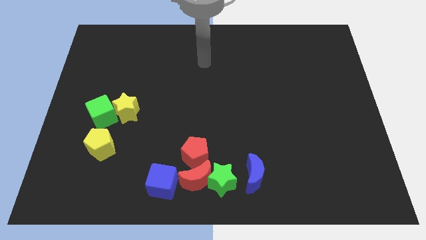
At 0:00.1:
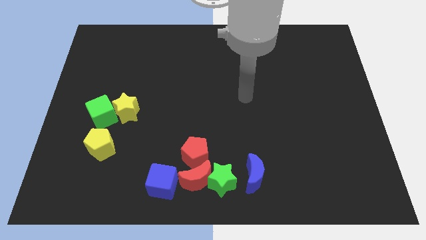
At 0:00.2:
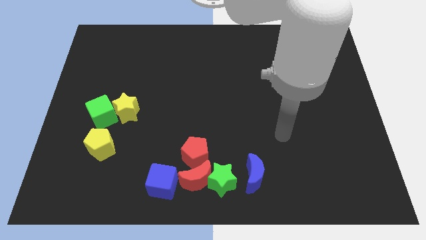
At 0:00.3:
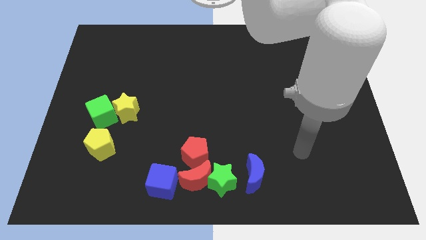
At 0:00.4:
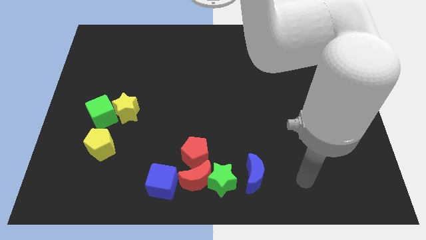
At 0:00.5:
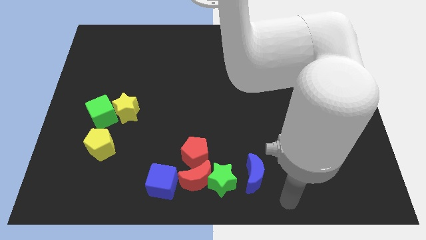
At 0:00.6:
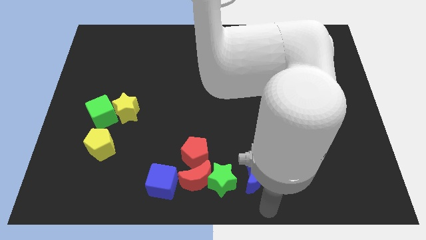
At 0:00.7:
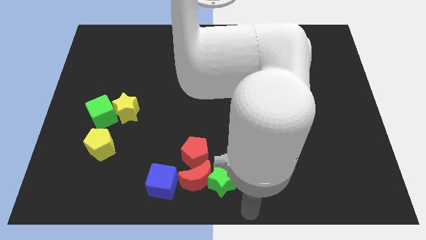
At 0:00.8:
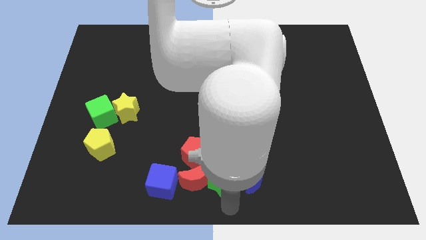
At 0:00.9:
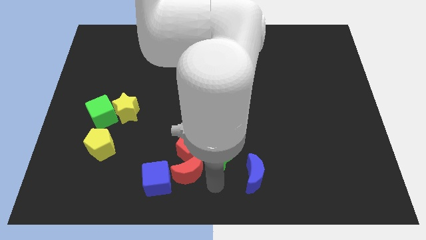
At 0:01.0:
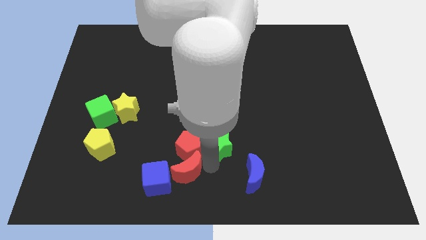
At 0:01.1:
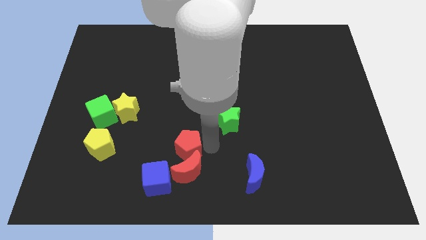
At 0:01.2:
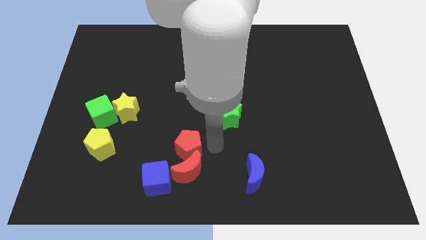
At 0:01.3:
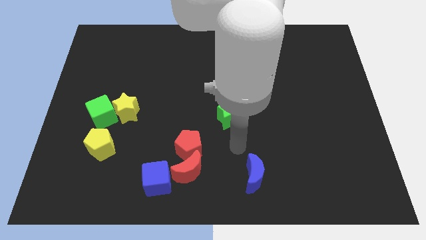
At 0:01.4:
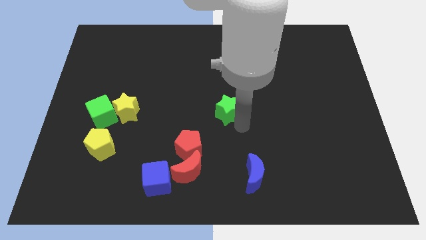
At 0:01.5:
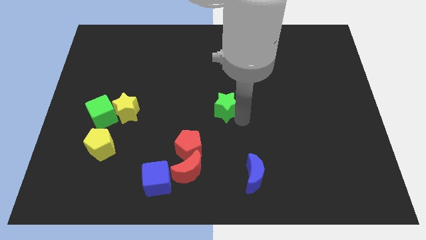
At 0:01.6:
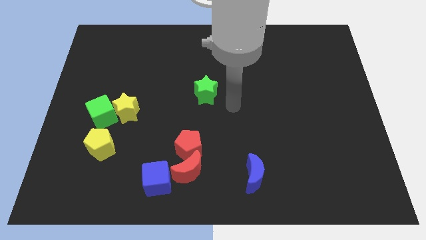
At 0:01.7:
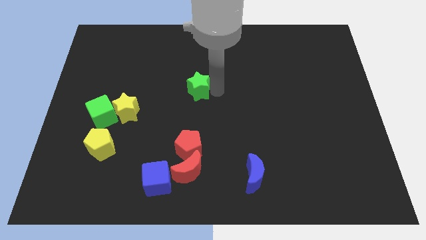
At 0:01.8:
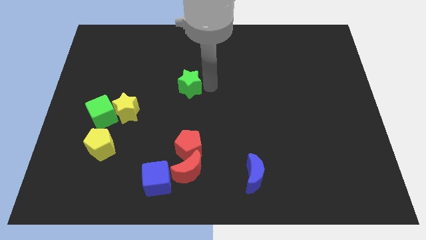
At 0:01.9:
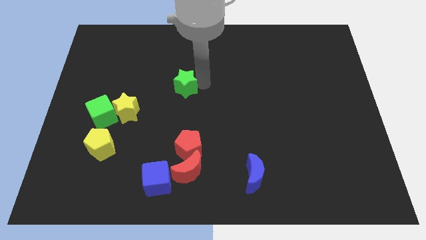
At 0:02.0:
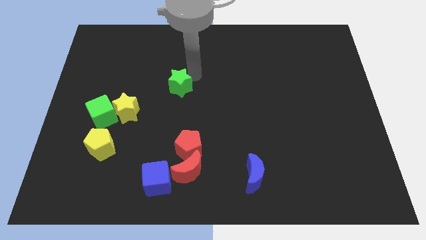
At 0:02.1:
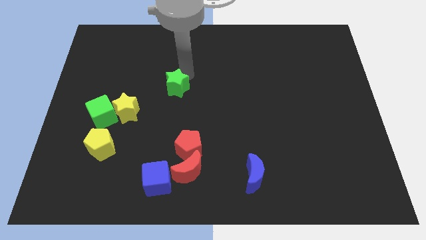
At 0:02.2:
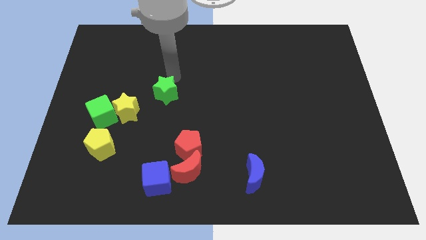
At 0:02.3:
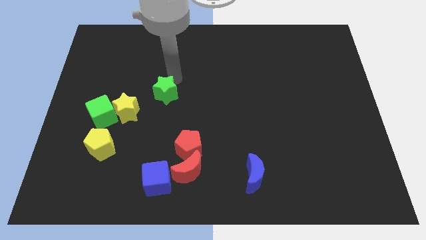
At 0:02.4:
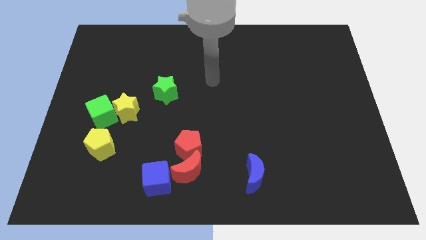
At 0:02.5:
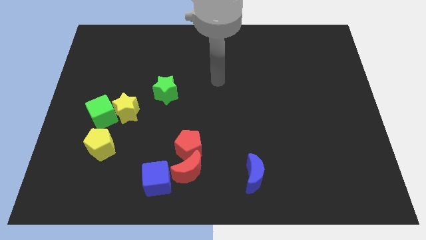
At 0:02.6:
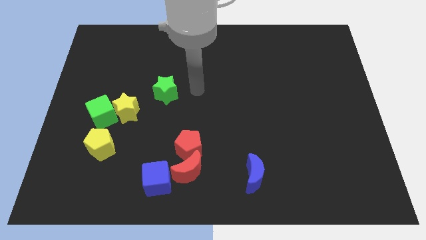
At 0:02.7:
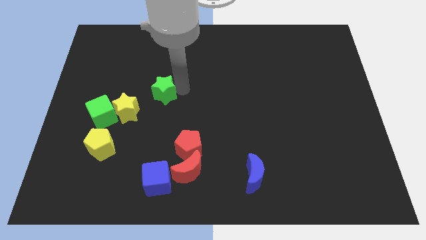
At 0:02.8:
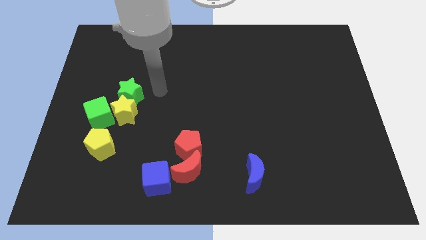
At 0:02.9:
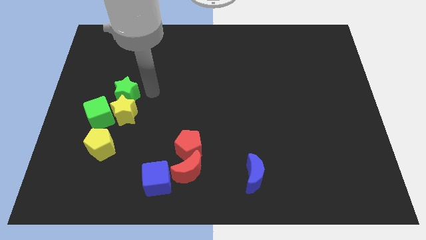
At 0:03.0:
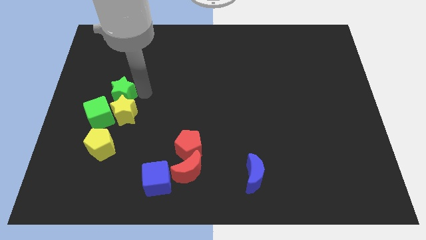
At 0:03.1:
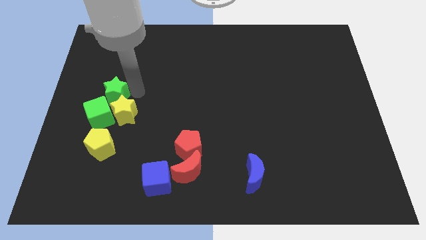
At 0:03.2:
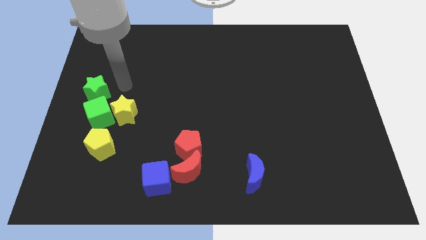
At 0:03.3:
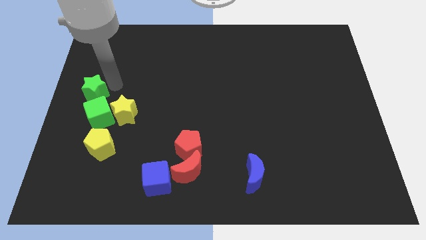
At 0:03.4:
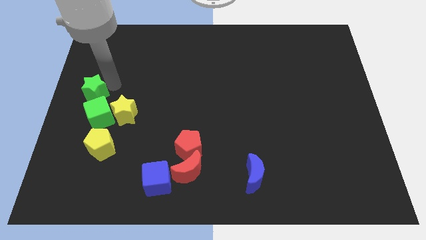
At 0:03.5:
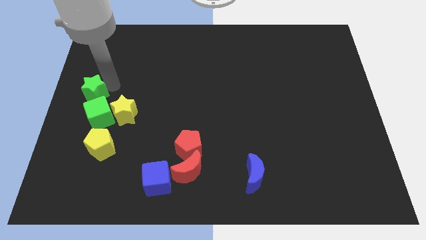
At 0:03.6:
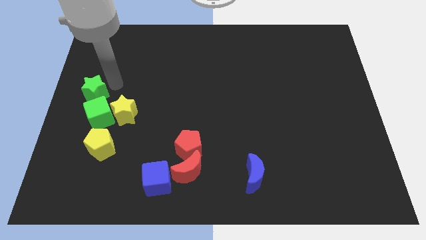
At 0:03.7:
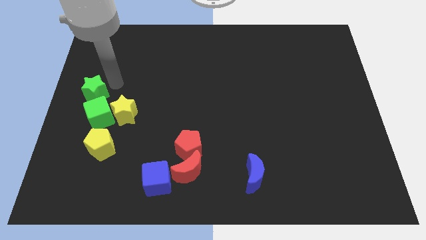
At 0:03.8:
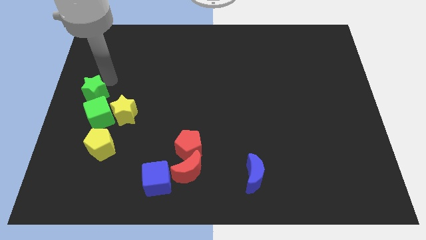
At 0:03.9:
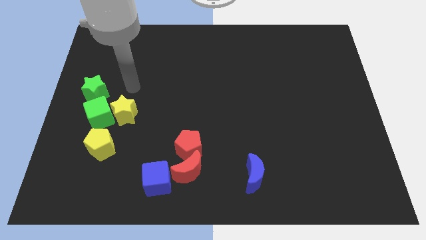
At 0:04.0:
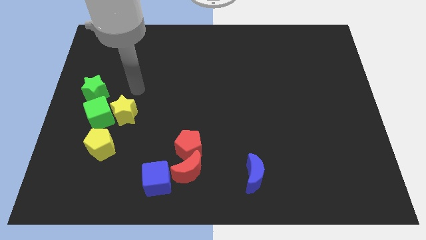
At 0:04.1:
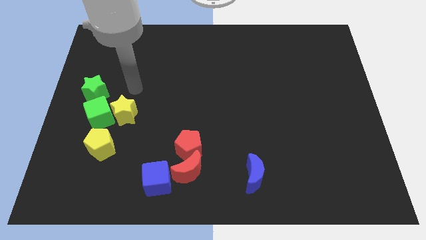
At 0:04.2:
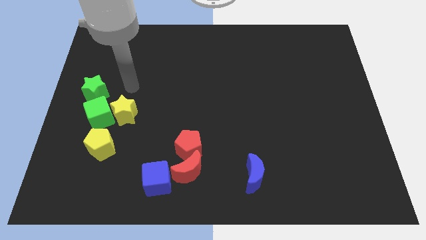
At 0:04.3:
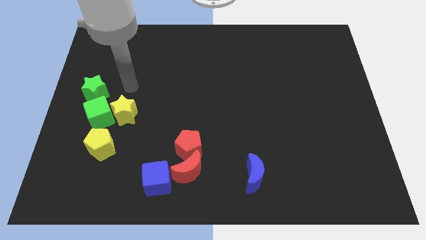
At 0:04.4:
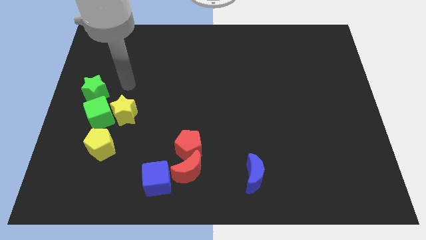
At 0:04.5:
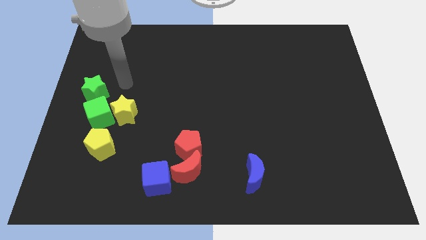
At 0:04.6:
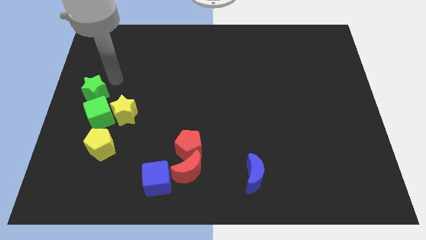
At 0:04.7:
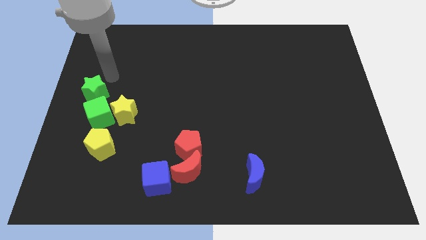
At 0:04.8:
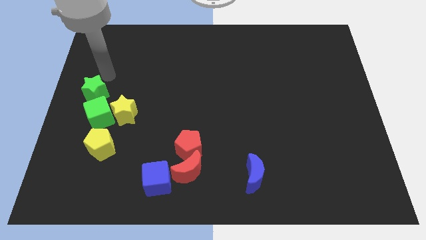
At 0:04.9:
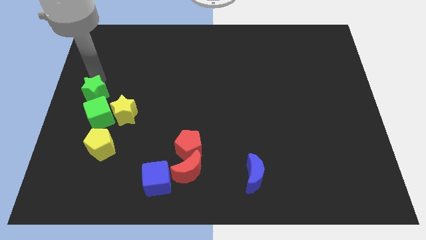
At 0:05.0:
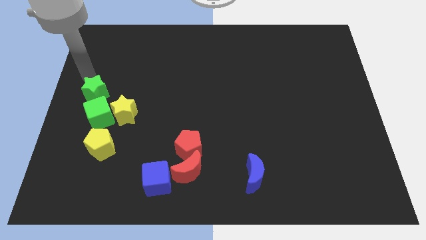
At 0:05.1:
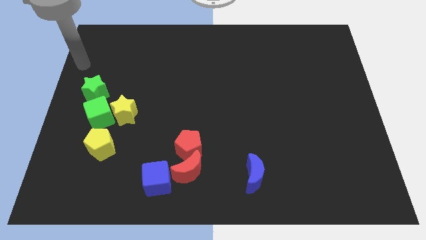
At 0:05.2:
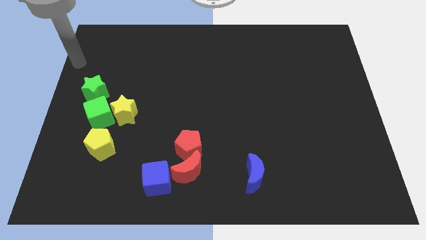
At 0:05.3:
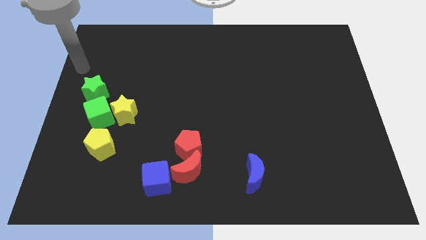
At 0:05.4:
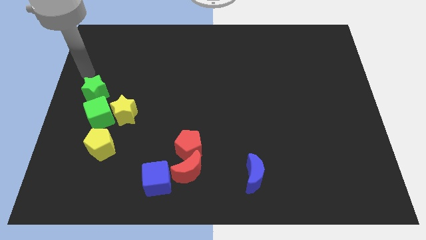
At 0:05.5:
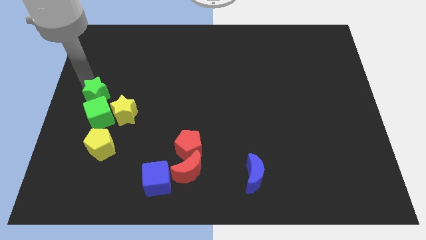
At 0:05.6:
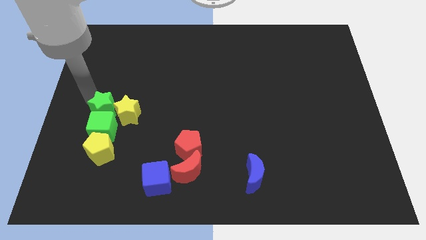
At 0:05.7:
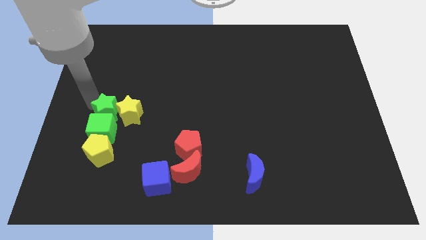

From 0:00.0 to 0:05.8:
push the green star close to the green cube

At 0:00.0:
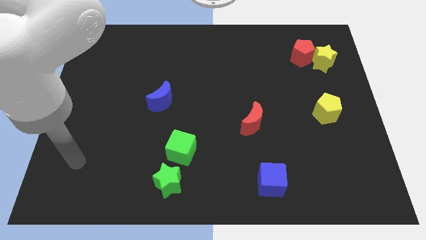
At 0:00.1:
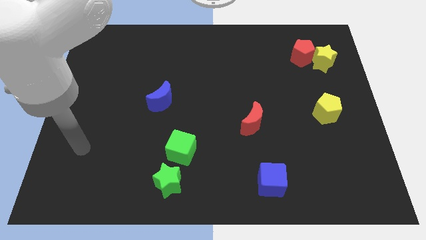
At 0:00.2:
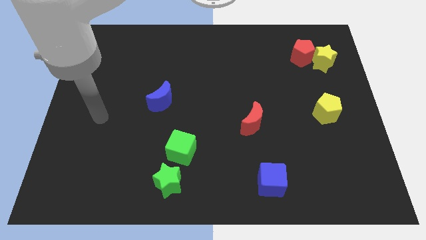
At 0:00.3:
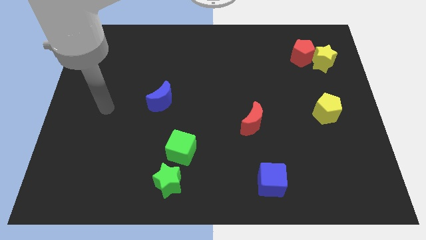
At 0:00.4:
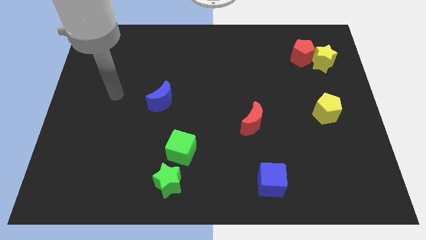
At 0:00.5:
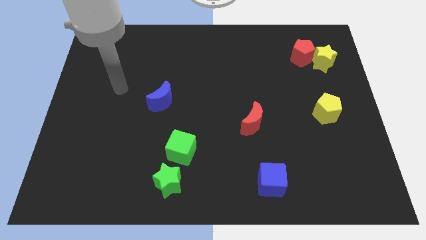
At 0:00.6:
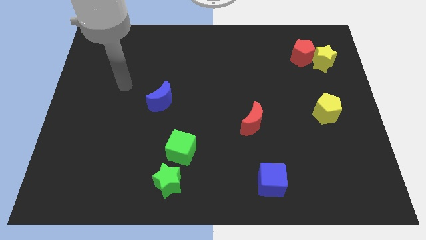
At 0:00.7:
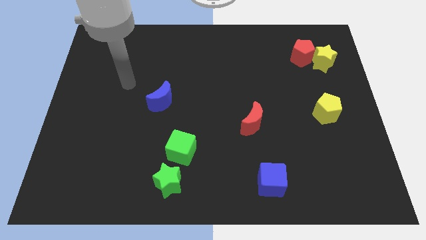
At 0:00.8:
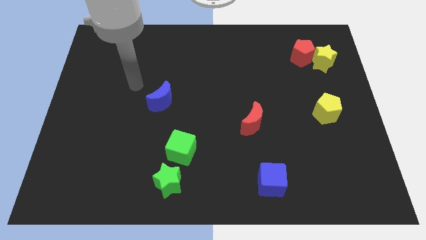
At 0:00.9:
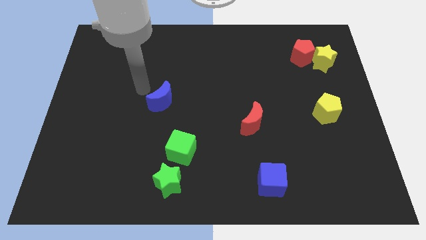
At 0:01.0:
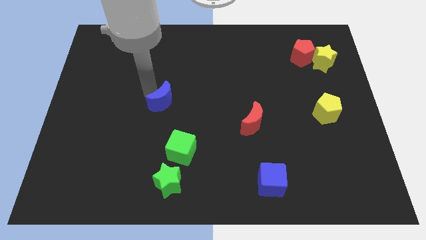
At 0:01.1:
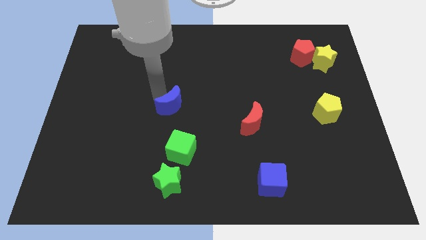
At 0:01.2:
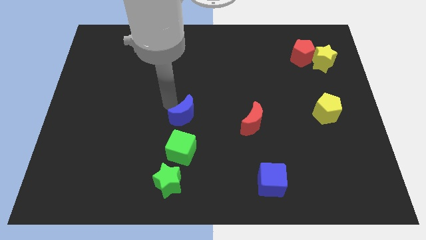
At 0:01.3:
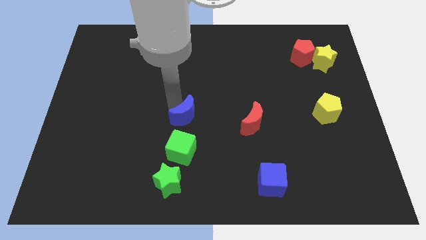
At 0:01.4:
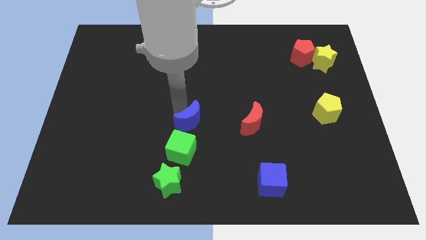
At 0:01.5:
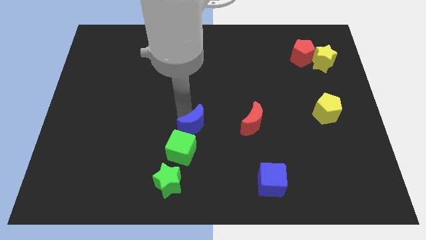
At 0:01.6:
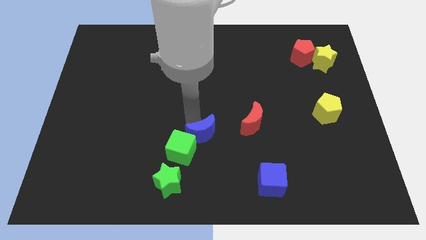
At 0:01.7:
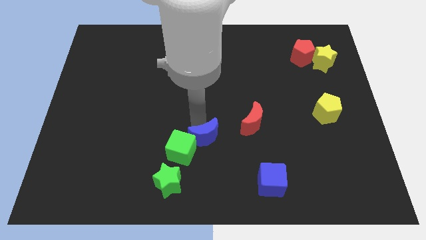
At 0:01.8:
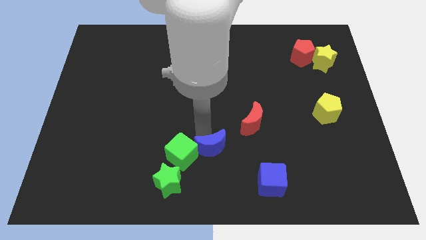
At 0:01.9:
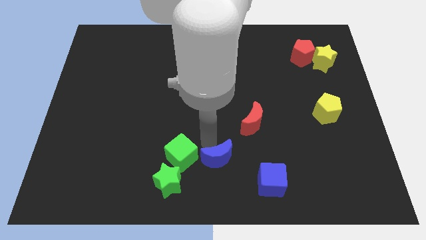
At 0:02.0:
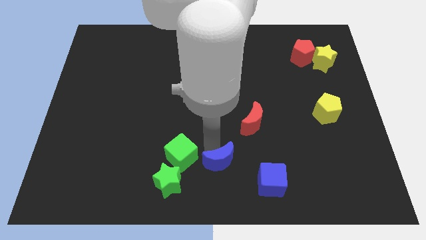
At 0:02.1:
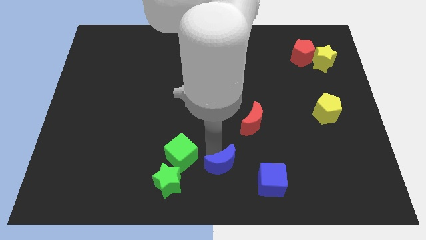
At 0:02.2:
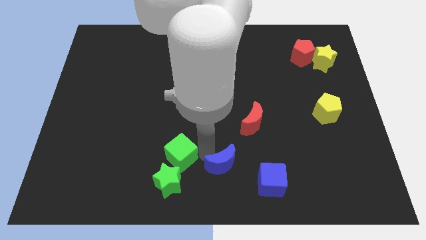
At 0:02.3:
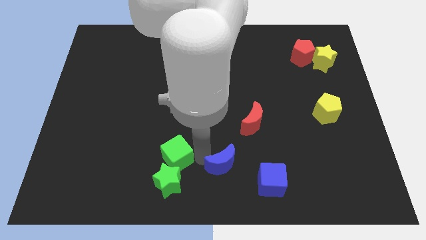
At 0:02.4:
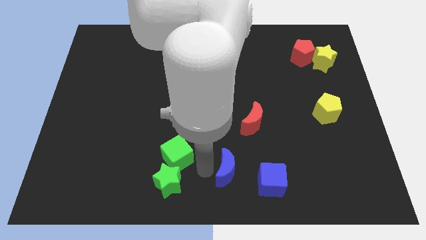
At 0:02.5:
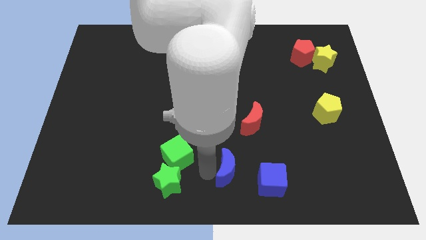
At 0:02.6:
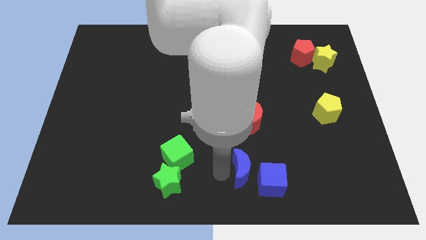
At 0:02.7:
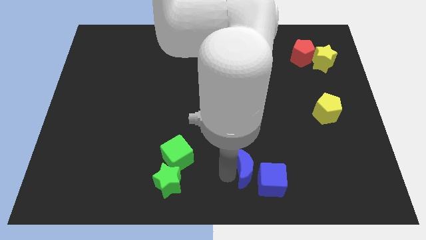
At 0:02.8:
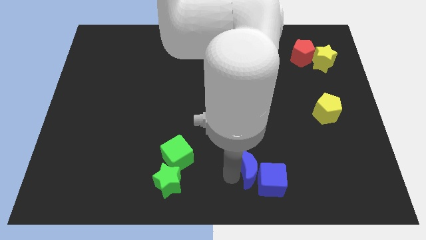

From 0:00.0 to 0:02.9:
push the blue moon close to the blue cube
